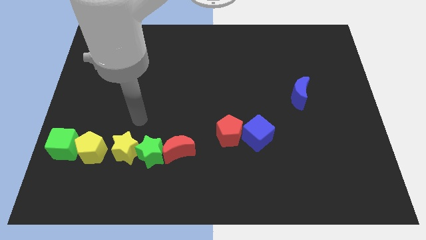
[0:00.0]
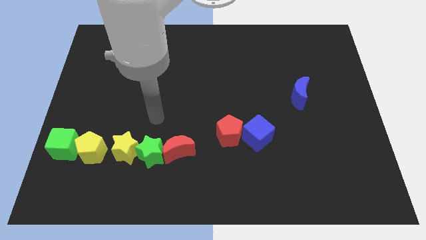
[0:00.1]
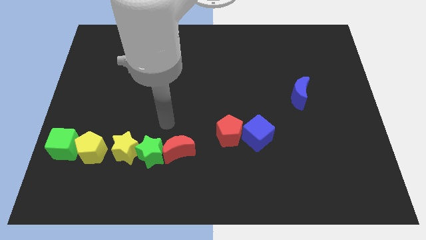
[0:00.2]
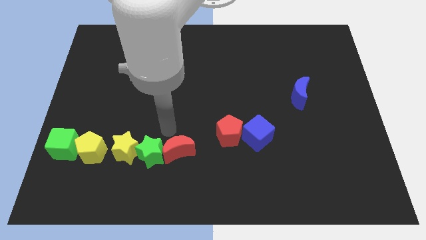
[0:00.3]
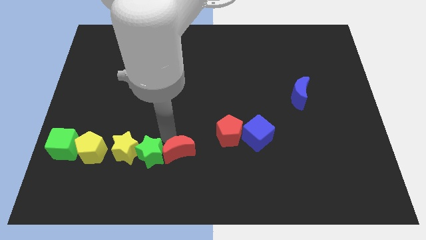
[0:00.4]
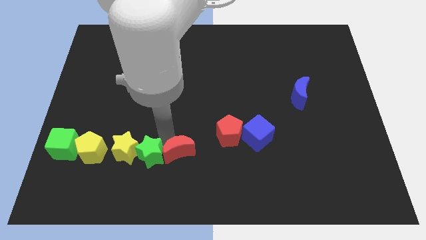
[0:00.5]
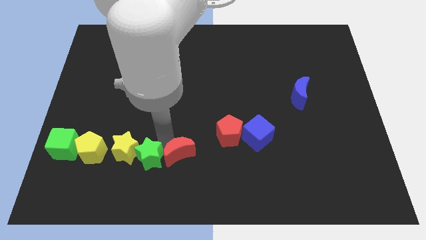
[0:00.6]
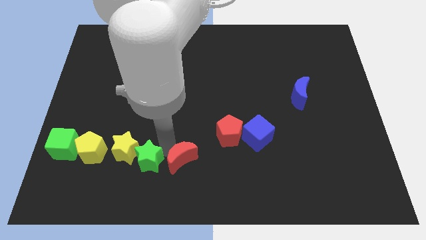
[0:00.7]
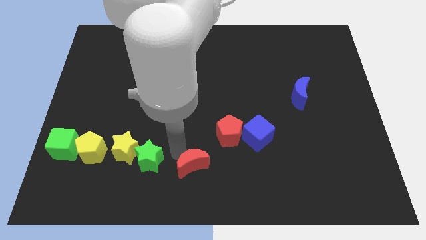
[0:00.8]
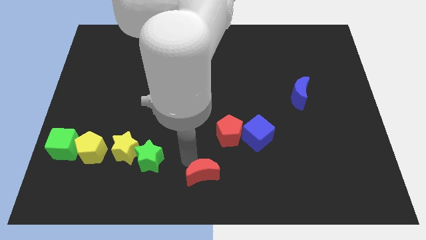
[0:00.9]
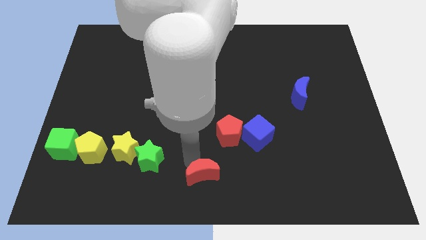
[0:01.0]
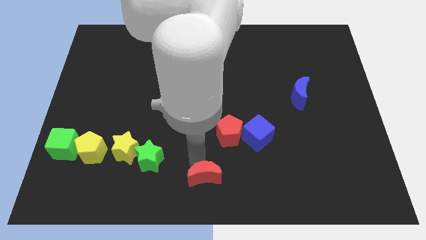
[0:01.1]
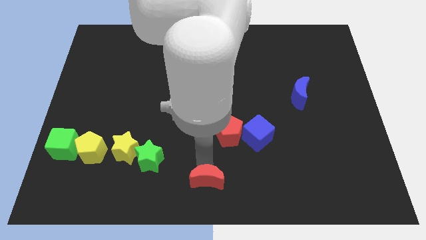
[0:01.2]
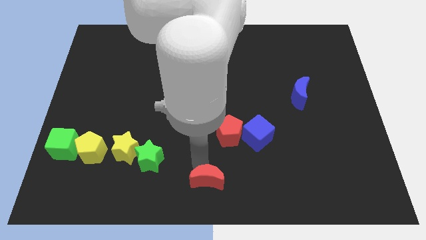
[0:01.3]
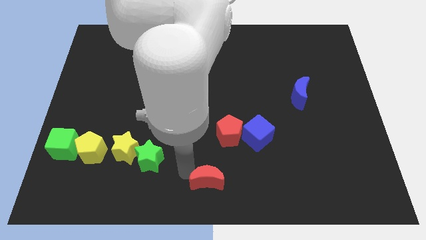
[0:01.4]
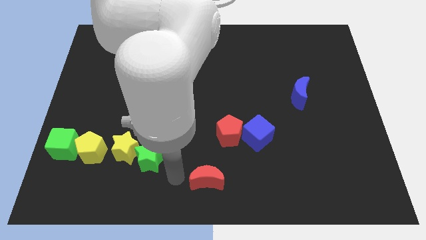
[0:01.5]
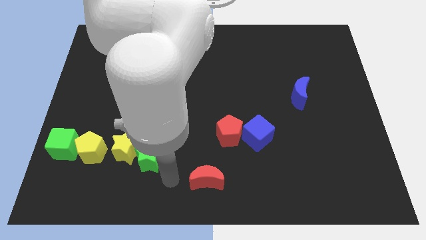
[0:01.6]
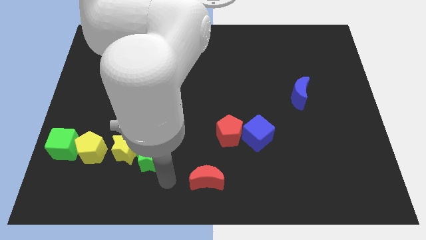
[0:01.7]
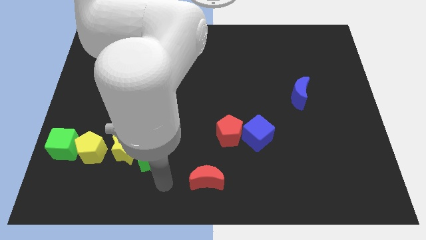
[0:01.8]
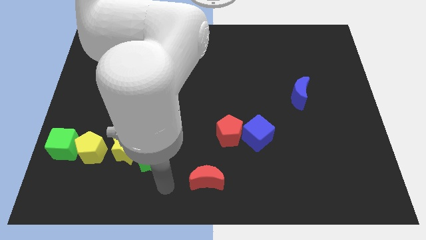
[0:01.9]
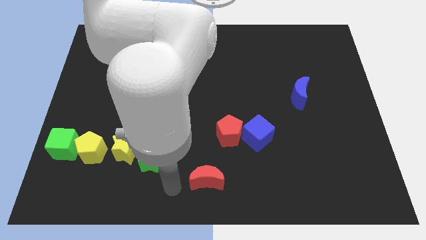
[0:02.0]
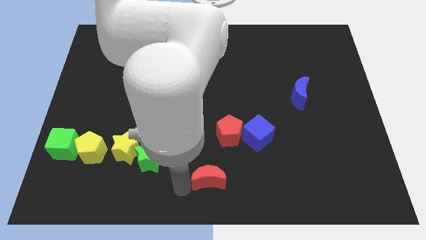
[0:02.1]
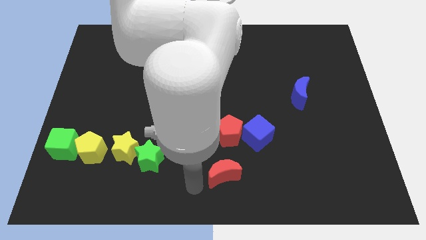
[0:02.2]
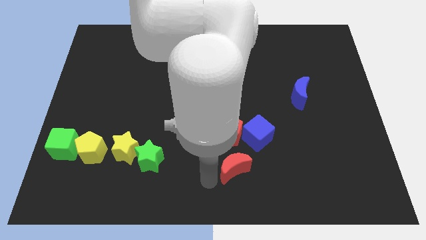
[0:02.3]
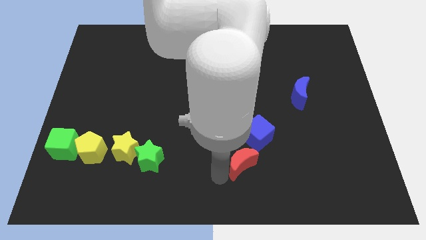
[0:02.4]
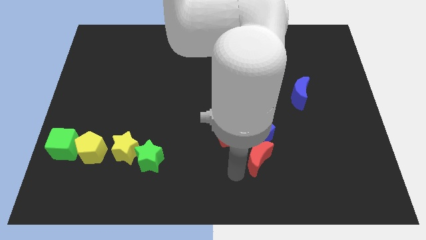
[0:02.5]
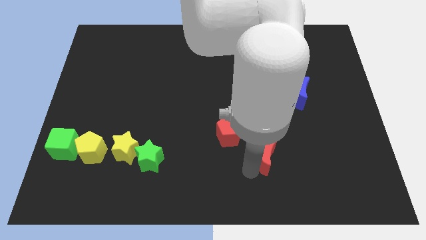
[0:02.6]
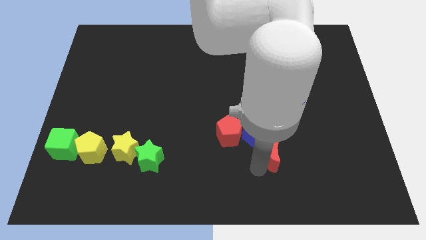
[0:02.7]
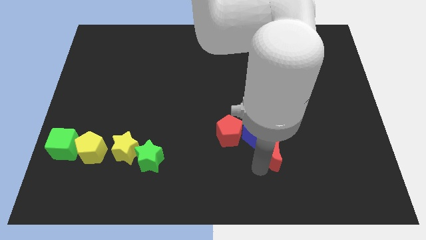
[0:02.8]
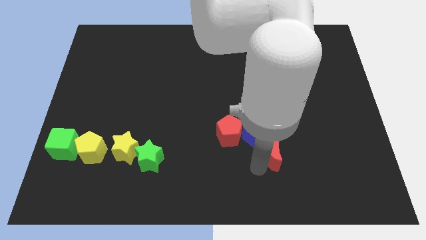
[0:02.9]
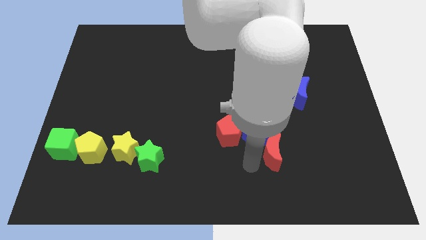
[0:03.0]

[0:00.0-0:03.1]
place the red crescent at the bottom right of the blue cube

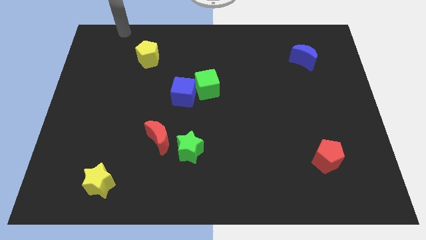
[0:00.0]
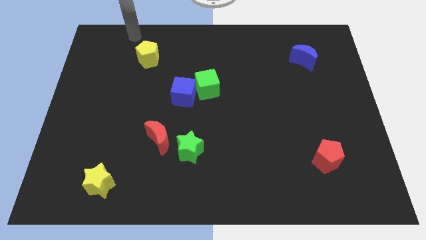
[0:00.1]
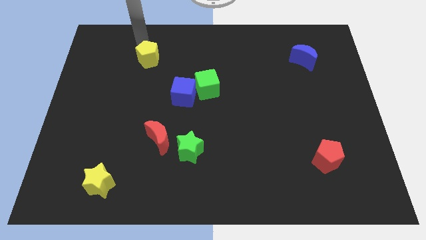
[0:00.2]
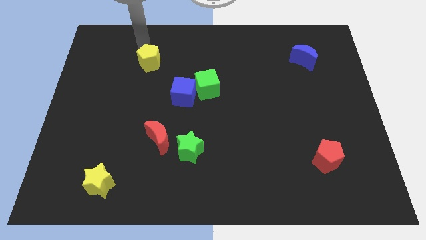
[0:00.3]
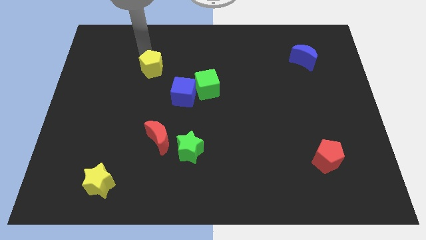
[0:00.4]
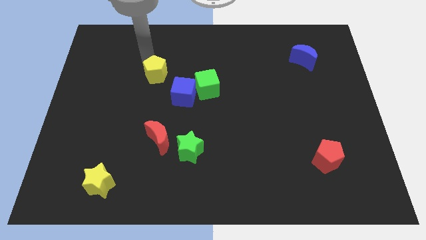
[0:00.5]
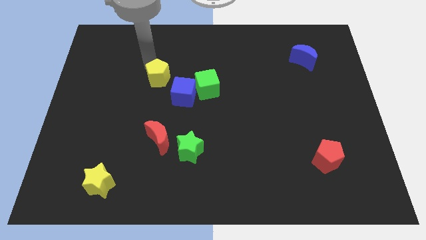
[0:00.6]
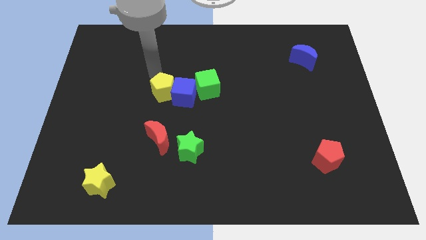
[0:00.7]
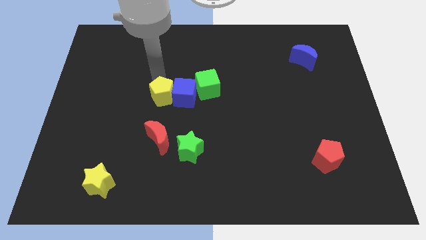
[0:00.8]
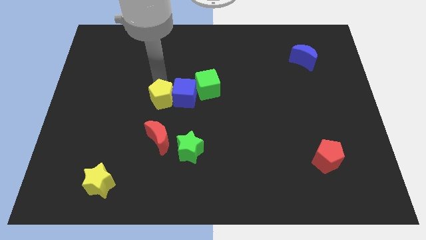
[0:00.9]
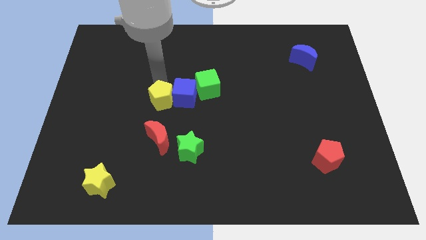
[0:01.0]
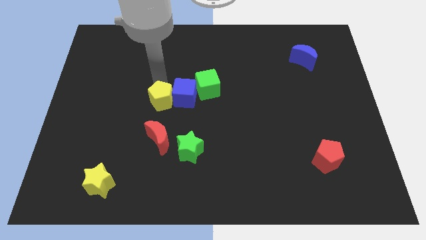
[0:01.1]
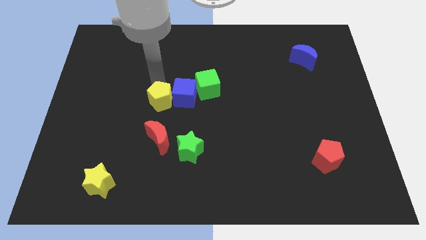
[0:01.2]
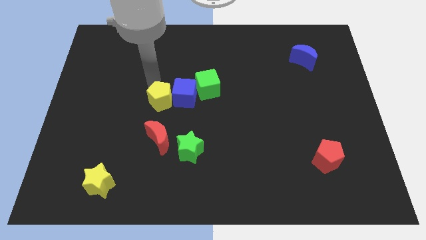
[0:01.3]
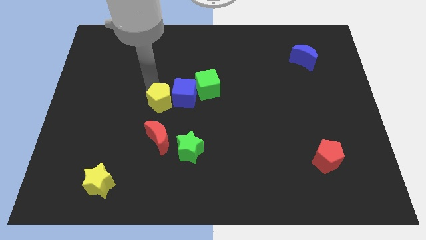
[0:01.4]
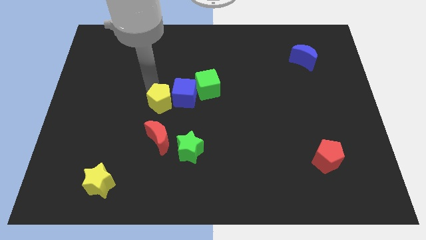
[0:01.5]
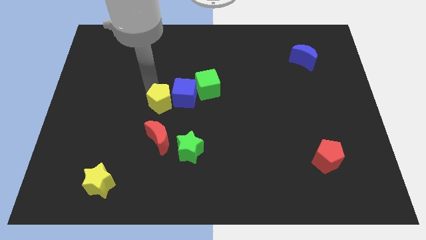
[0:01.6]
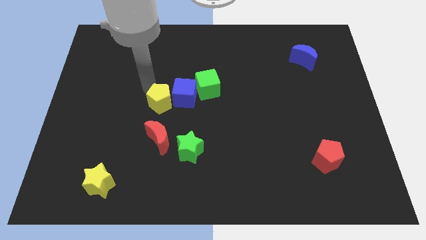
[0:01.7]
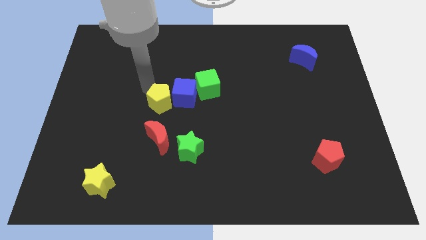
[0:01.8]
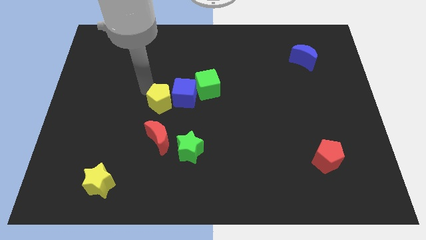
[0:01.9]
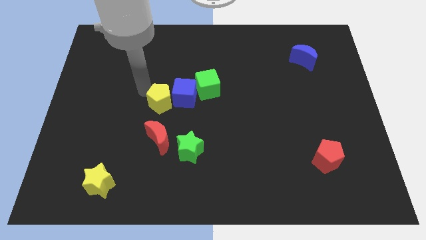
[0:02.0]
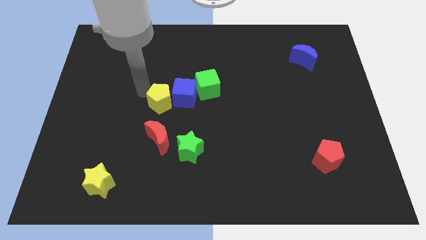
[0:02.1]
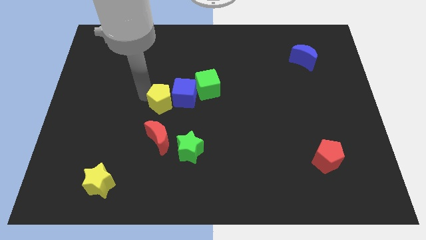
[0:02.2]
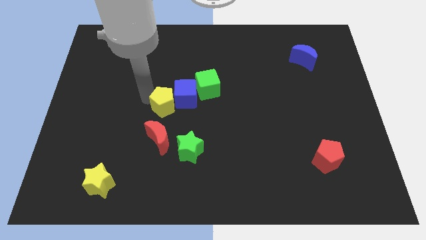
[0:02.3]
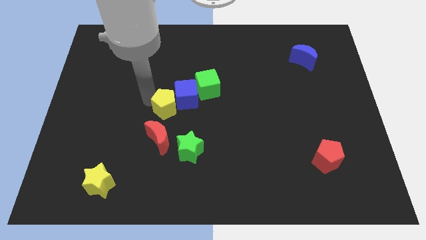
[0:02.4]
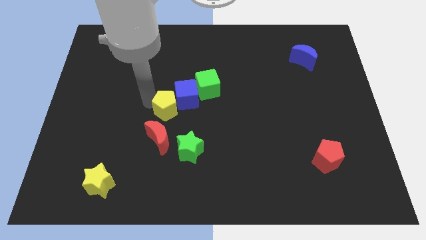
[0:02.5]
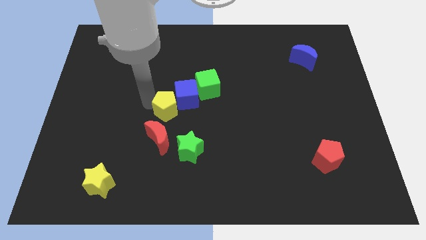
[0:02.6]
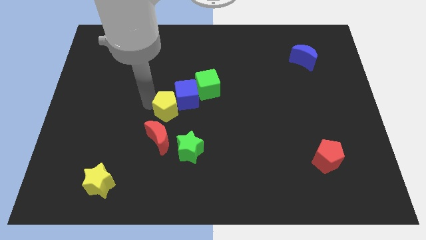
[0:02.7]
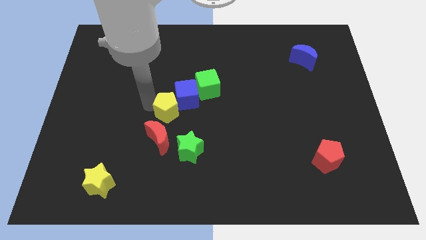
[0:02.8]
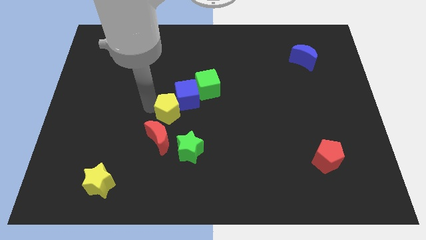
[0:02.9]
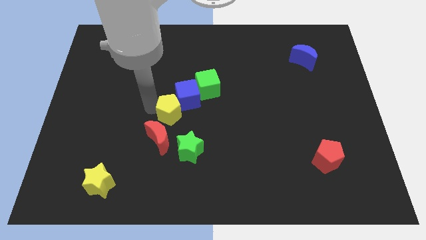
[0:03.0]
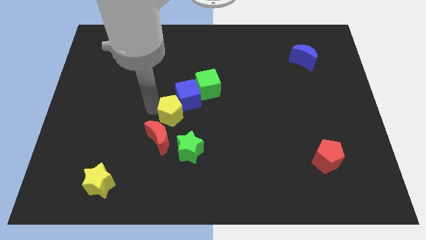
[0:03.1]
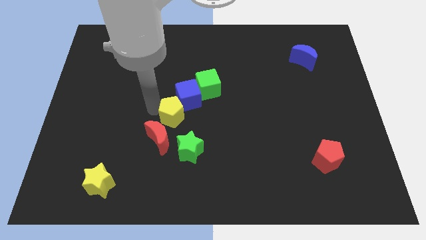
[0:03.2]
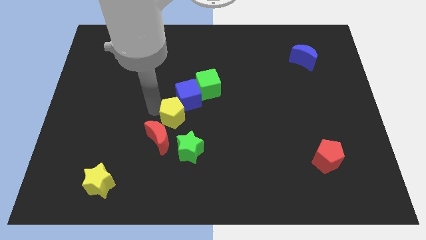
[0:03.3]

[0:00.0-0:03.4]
push the yellow pentagon diagonally in between blue cube and red crescent

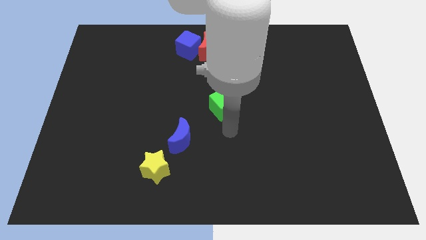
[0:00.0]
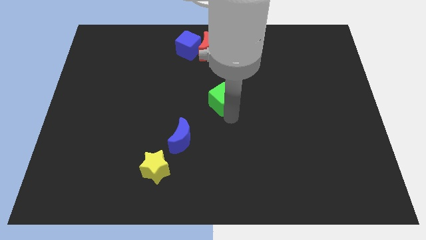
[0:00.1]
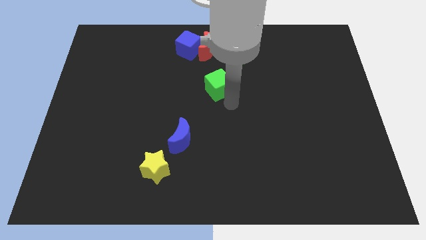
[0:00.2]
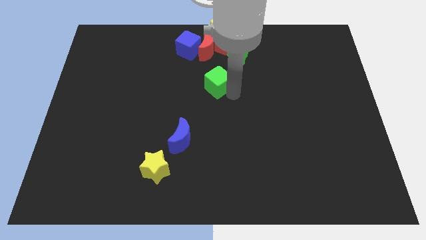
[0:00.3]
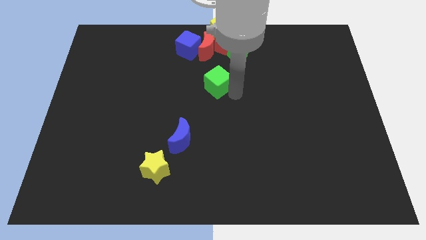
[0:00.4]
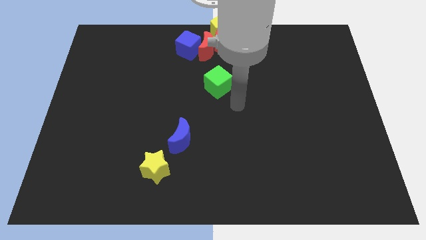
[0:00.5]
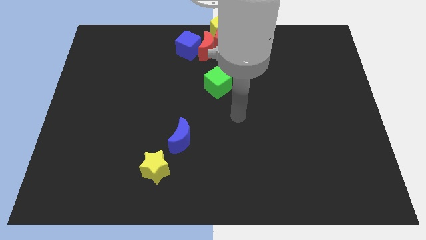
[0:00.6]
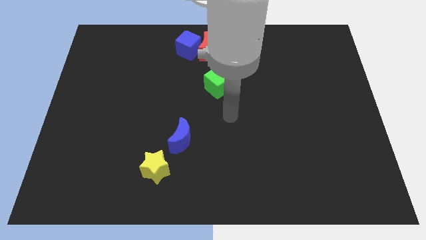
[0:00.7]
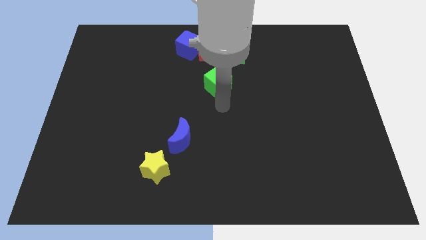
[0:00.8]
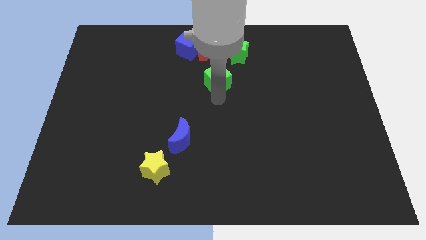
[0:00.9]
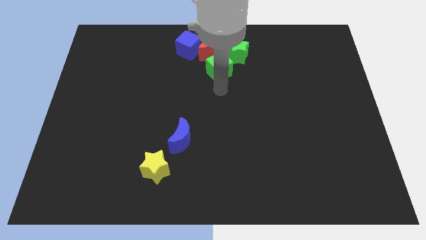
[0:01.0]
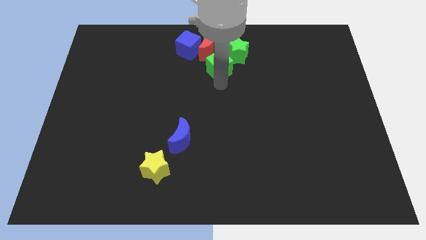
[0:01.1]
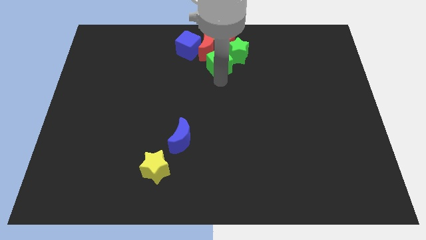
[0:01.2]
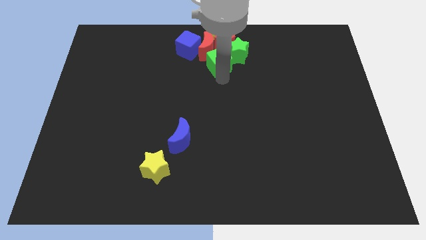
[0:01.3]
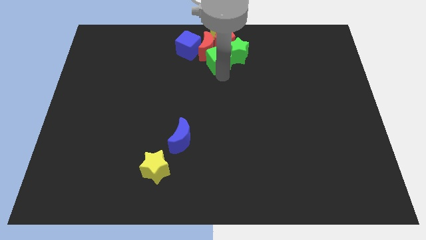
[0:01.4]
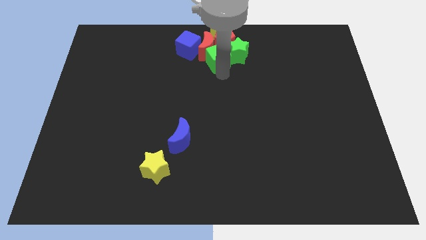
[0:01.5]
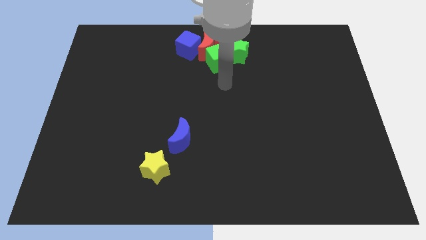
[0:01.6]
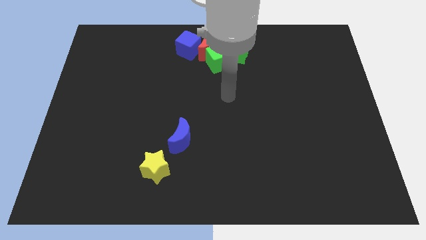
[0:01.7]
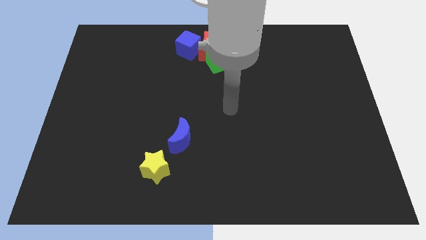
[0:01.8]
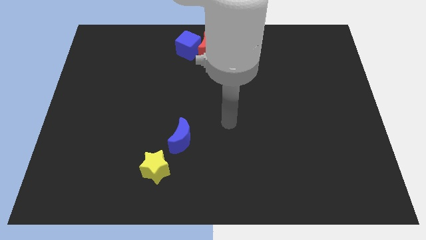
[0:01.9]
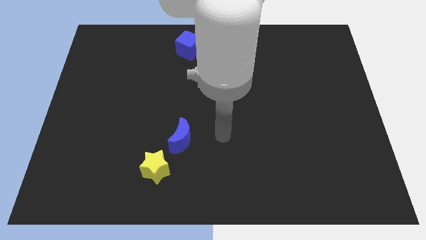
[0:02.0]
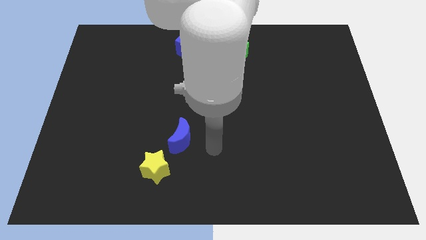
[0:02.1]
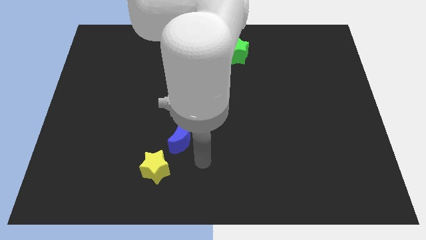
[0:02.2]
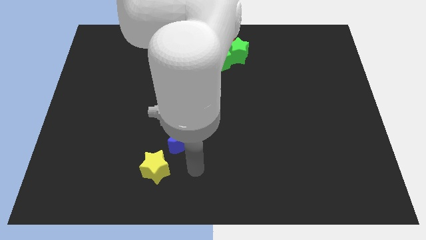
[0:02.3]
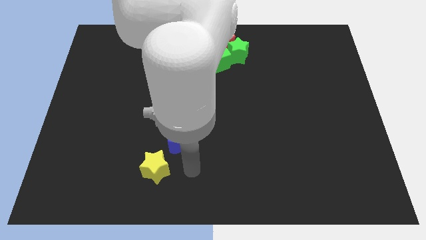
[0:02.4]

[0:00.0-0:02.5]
move the green cube into the group of blocks
